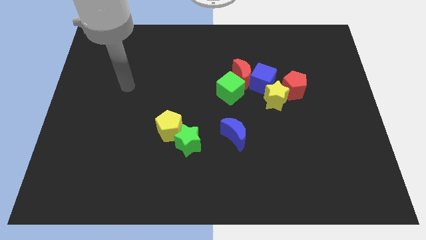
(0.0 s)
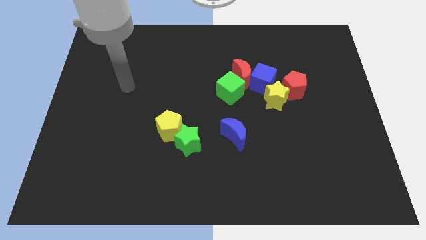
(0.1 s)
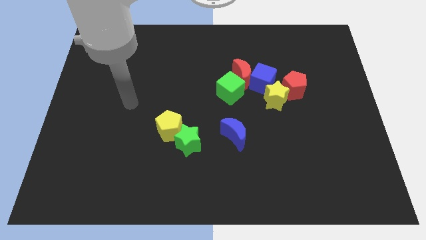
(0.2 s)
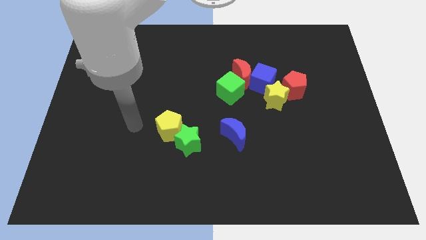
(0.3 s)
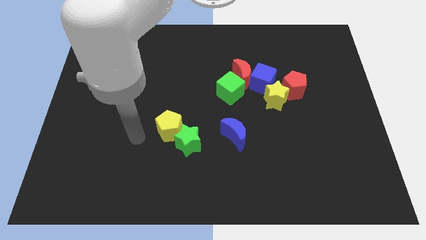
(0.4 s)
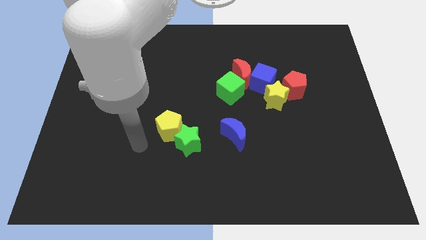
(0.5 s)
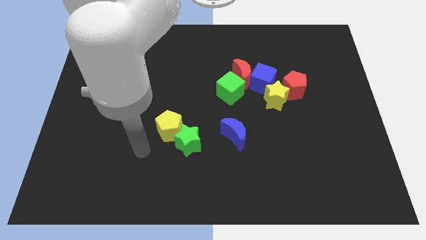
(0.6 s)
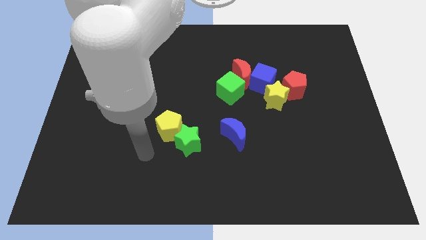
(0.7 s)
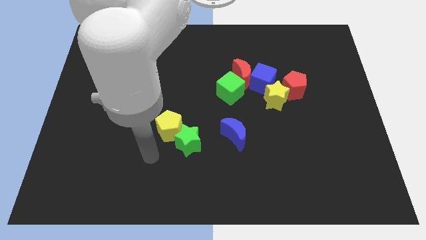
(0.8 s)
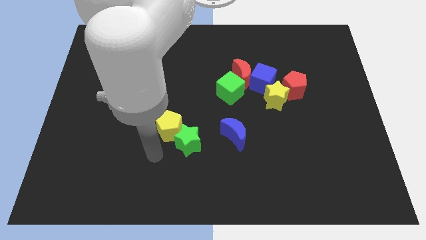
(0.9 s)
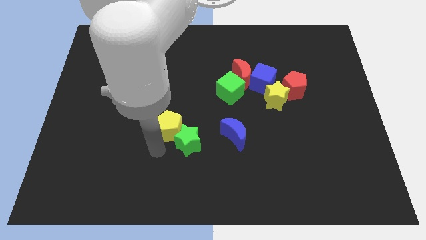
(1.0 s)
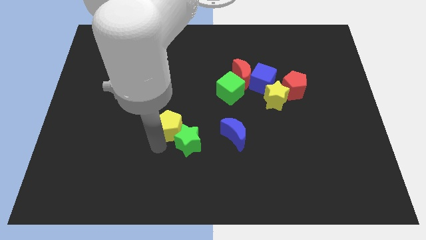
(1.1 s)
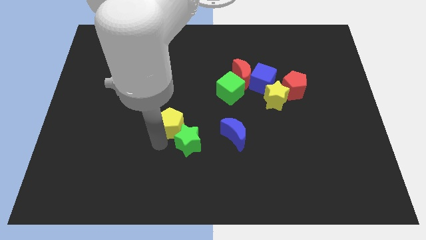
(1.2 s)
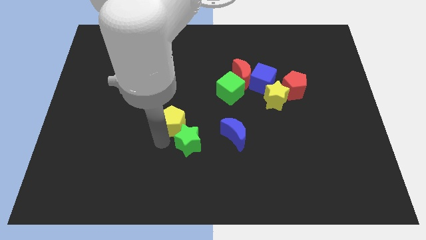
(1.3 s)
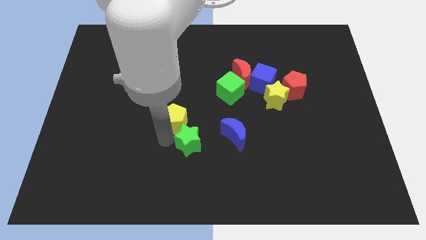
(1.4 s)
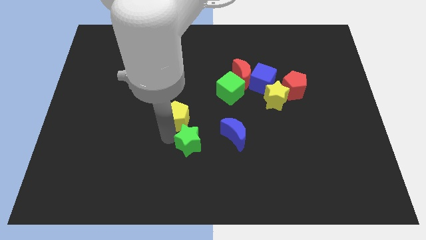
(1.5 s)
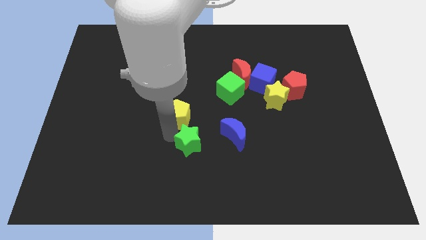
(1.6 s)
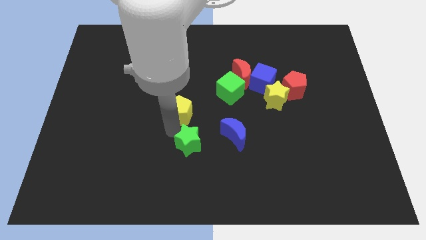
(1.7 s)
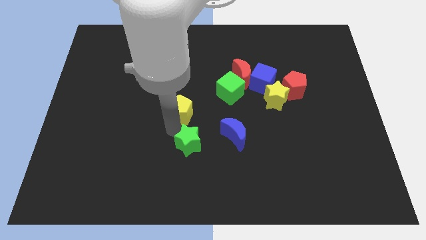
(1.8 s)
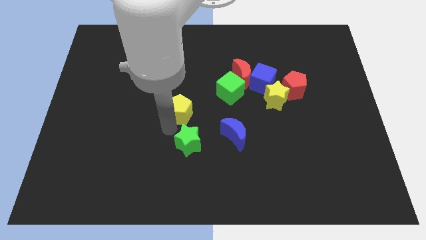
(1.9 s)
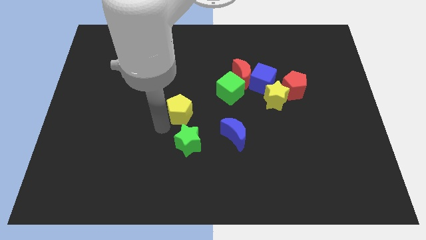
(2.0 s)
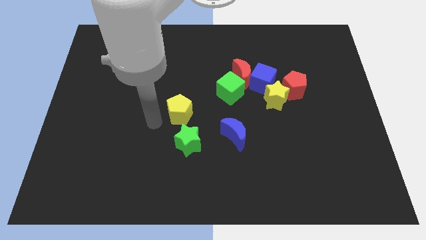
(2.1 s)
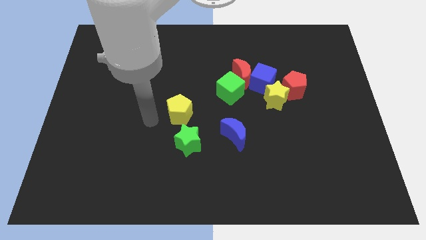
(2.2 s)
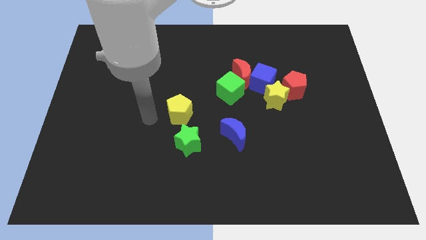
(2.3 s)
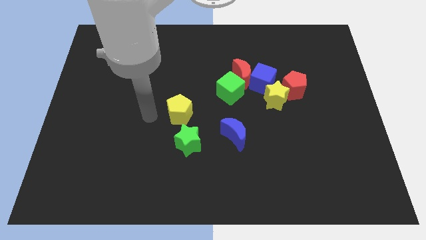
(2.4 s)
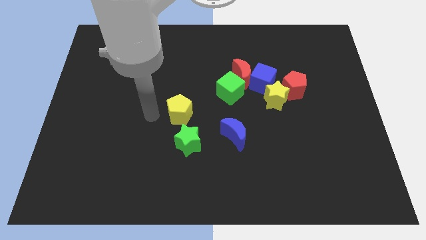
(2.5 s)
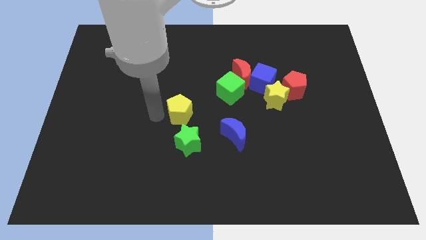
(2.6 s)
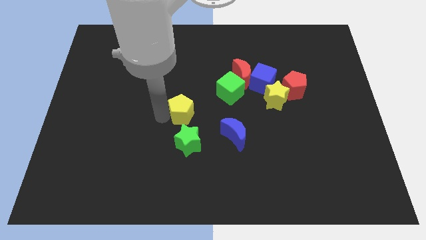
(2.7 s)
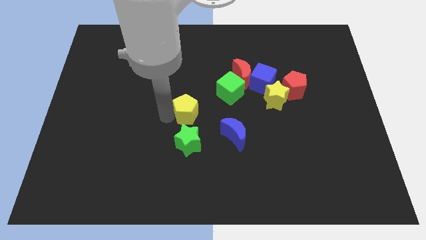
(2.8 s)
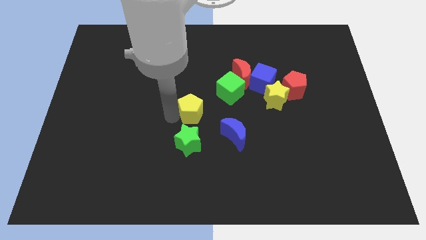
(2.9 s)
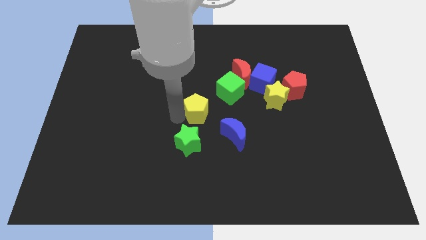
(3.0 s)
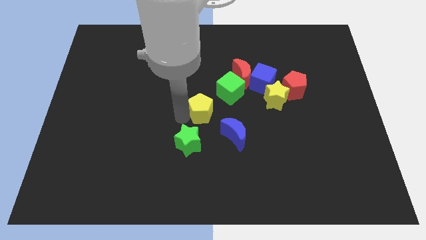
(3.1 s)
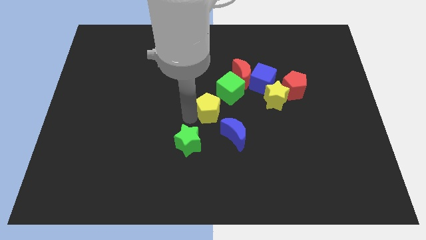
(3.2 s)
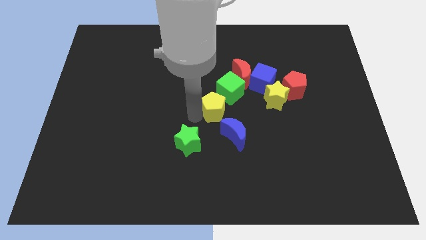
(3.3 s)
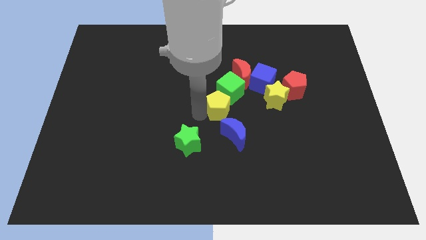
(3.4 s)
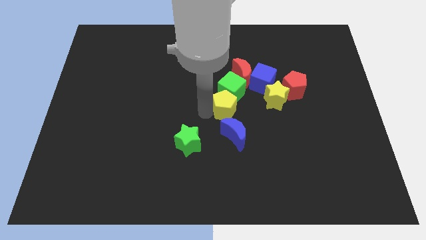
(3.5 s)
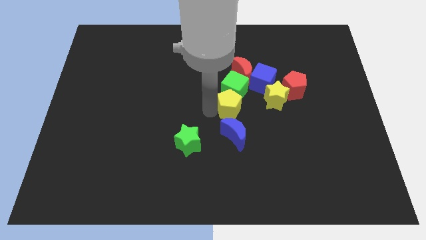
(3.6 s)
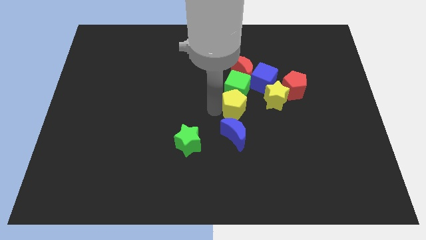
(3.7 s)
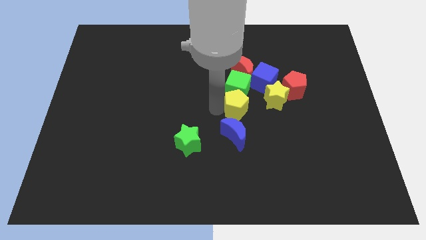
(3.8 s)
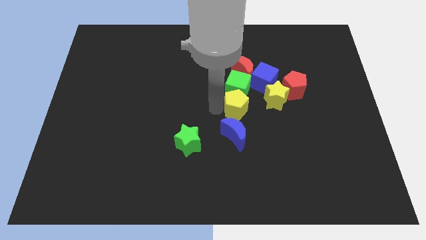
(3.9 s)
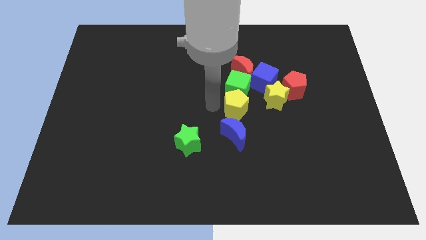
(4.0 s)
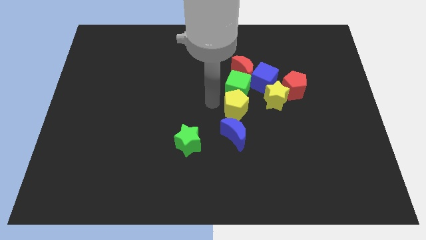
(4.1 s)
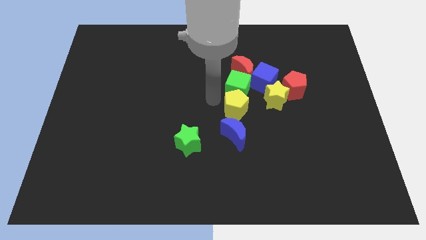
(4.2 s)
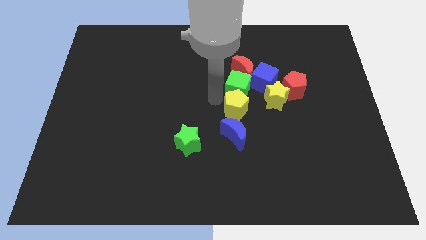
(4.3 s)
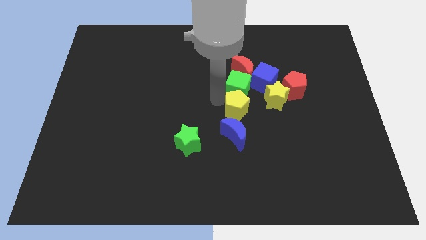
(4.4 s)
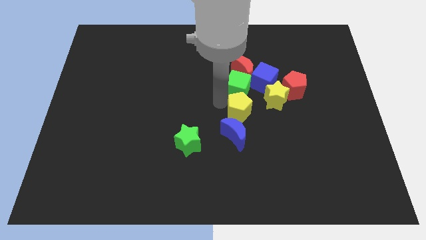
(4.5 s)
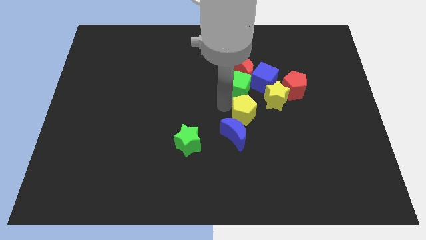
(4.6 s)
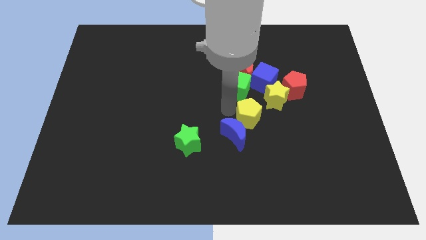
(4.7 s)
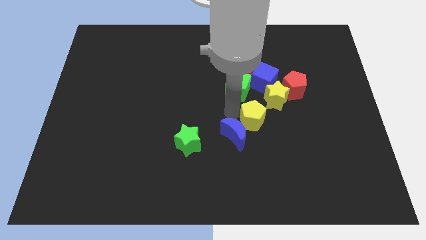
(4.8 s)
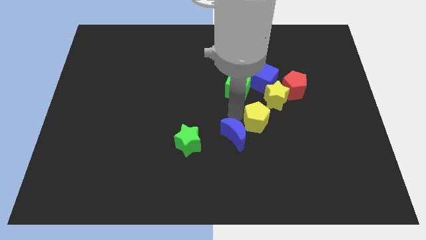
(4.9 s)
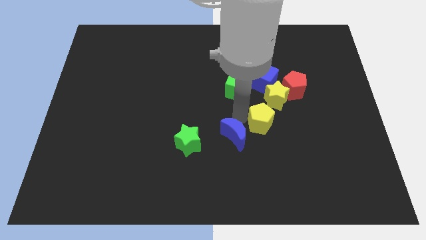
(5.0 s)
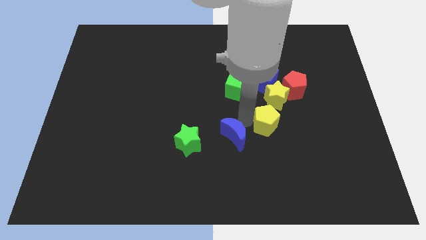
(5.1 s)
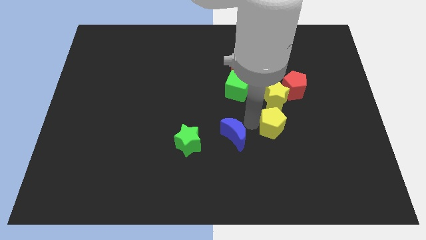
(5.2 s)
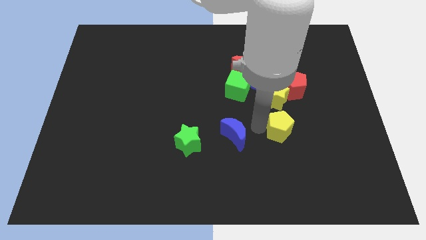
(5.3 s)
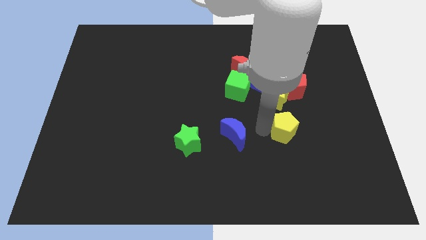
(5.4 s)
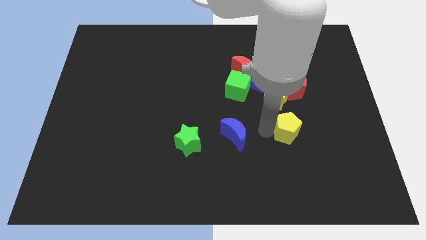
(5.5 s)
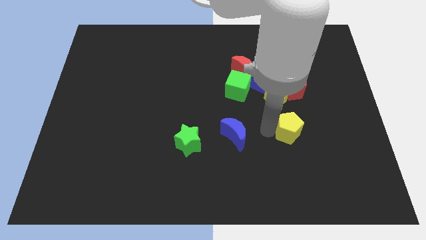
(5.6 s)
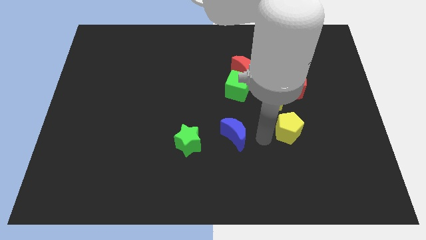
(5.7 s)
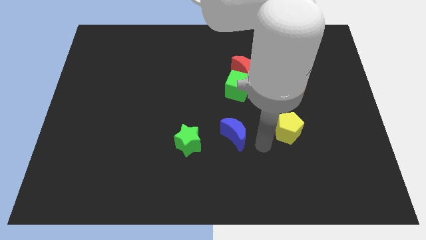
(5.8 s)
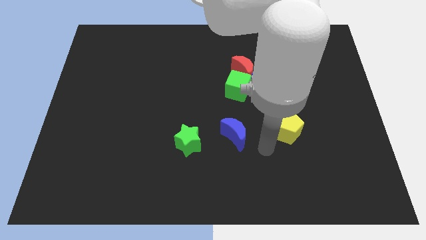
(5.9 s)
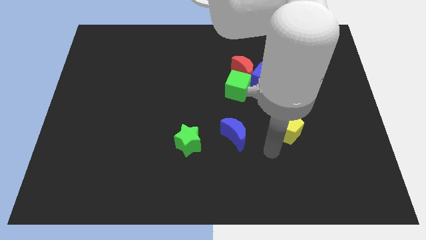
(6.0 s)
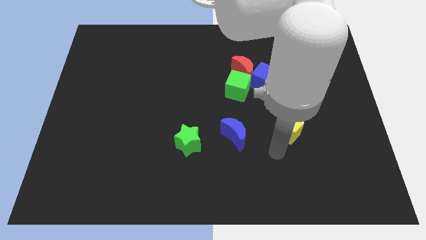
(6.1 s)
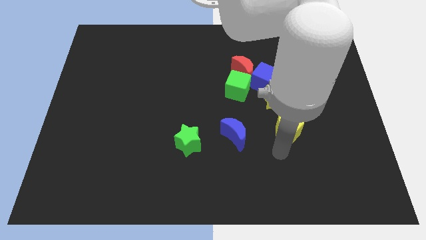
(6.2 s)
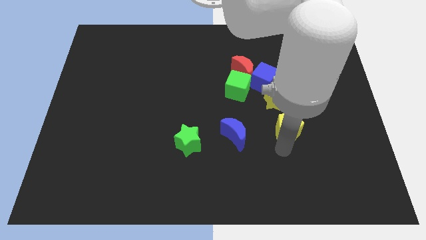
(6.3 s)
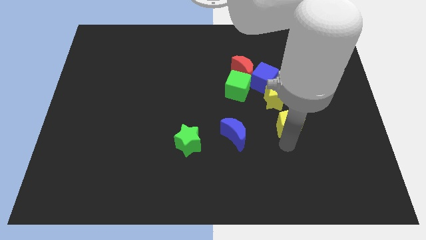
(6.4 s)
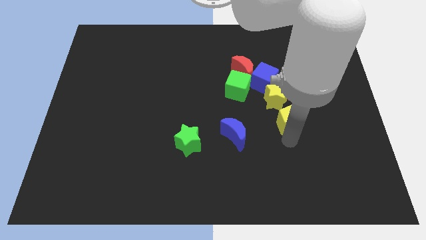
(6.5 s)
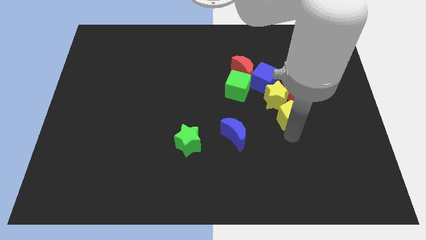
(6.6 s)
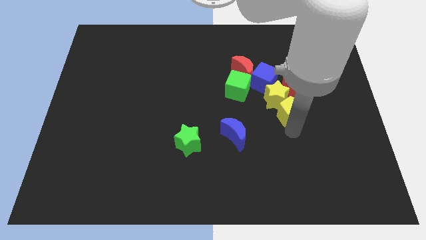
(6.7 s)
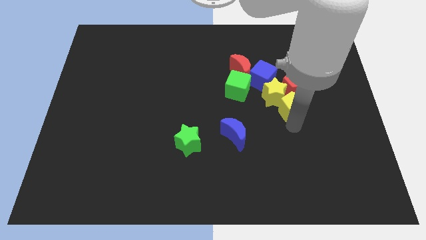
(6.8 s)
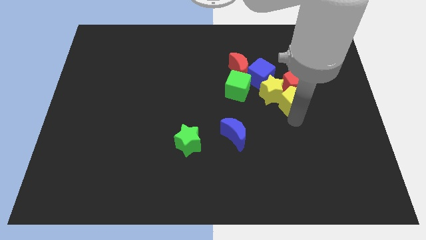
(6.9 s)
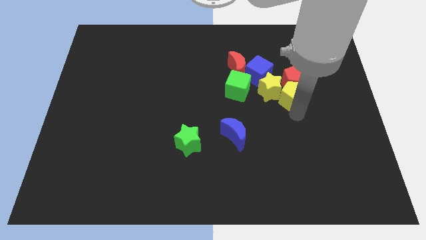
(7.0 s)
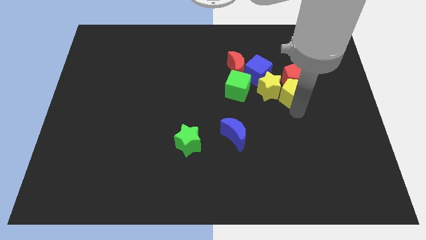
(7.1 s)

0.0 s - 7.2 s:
push the yellow pentagon to the red pentagon

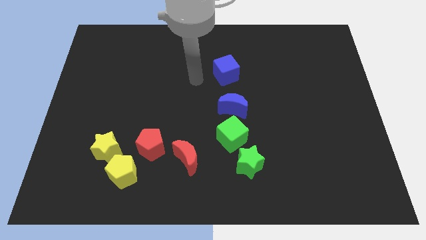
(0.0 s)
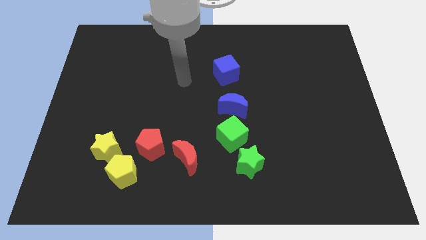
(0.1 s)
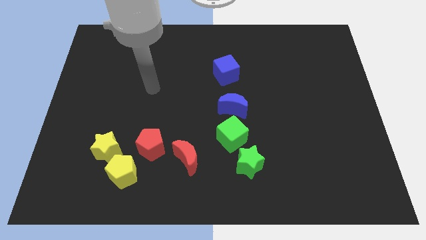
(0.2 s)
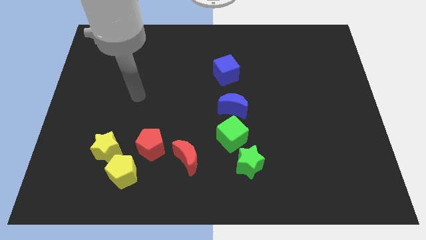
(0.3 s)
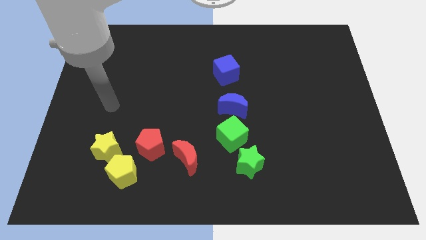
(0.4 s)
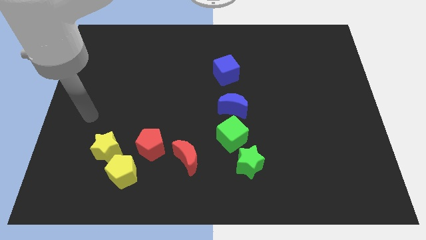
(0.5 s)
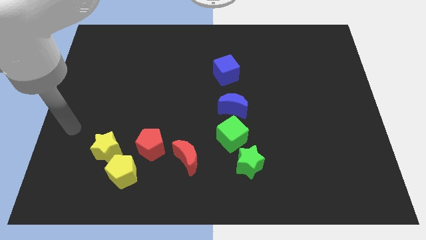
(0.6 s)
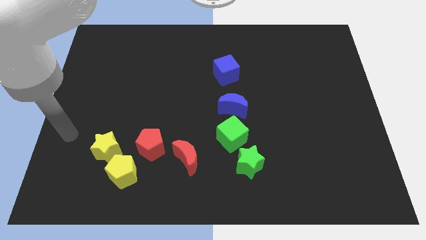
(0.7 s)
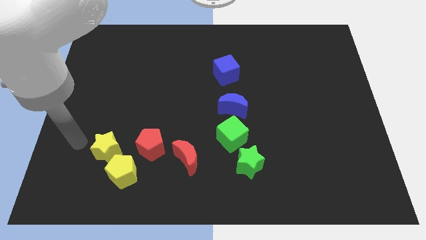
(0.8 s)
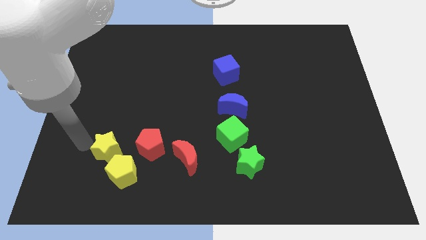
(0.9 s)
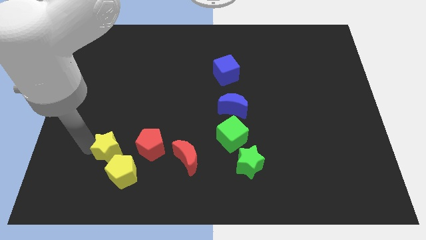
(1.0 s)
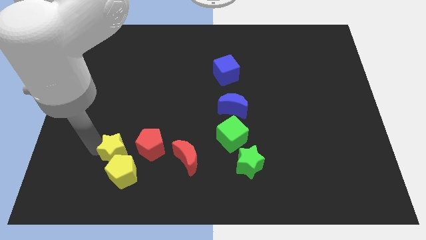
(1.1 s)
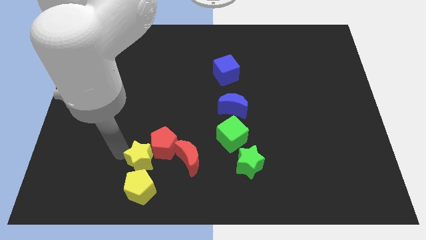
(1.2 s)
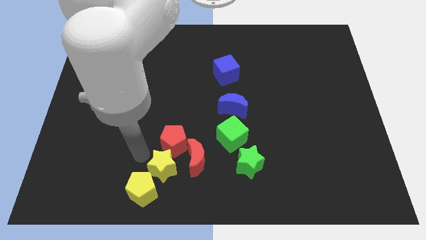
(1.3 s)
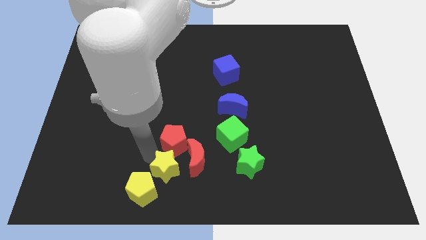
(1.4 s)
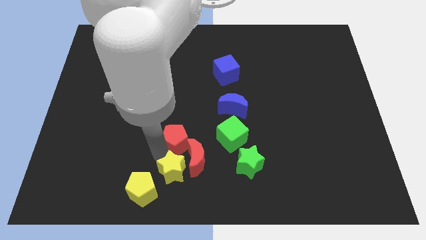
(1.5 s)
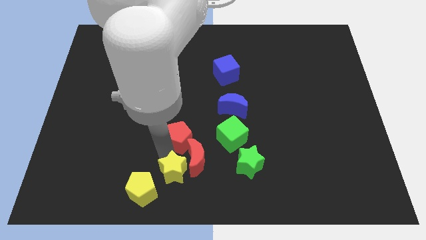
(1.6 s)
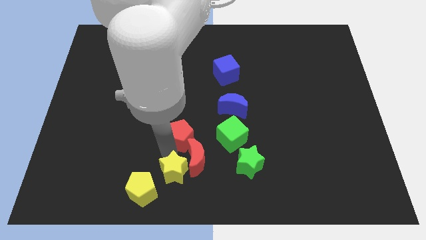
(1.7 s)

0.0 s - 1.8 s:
slide the yellow star close to the red moon
